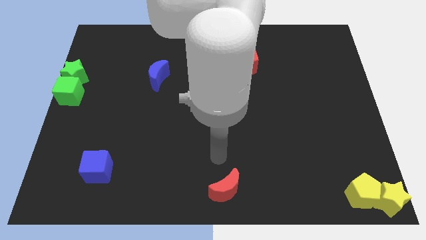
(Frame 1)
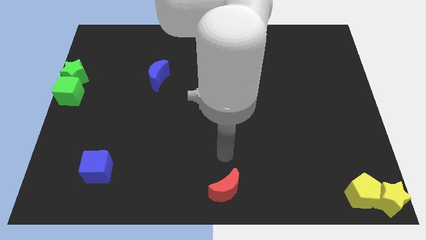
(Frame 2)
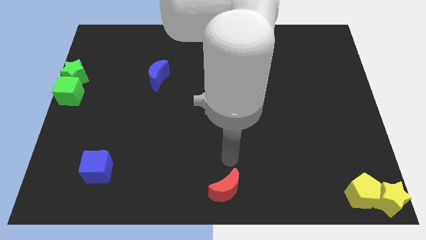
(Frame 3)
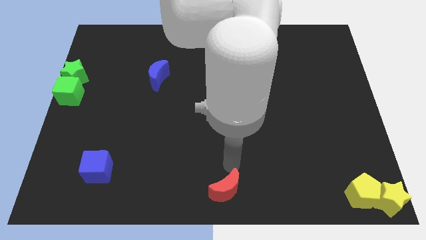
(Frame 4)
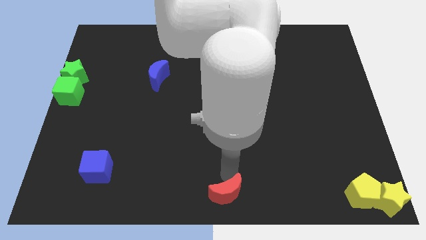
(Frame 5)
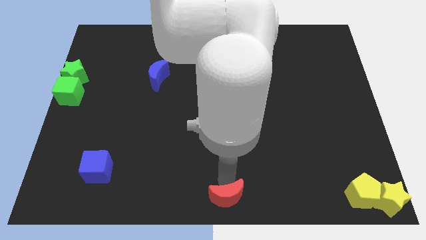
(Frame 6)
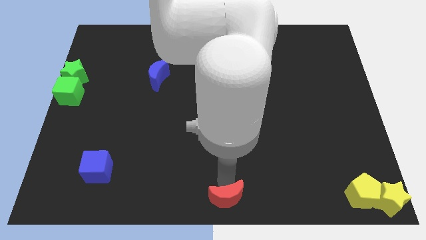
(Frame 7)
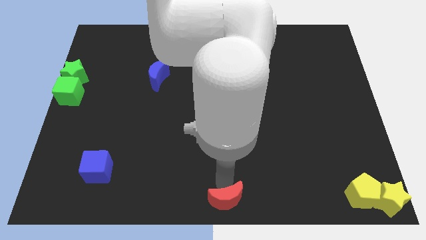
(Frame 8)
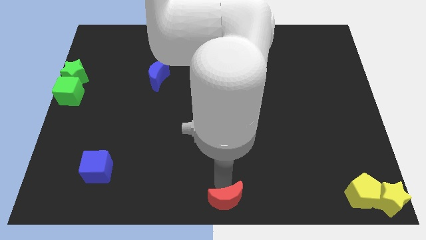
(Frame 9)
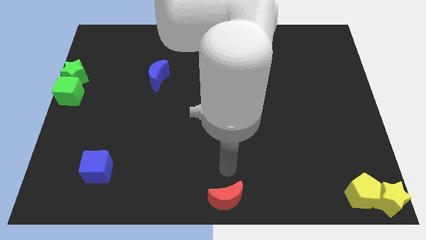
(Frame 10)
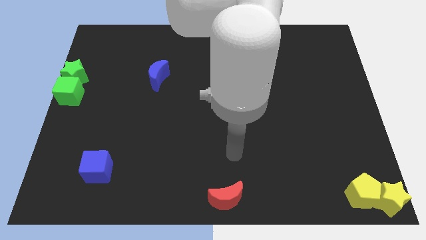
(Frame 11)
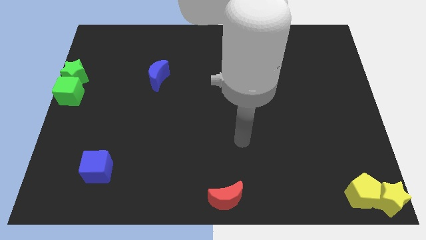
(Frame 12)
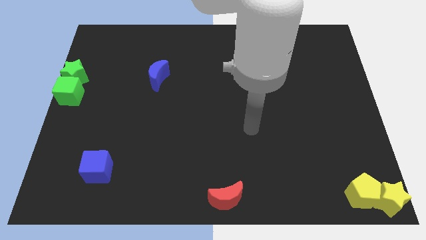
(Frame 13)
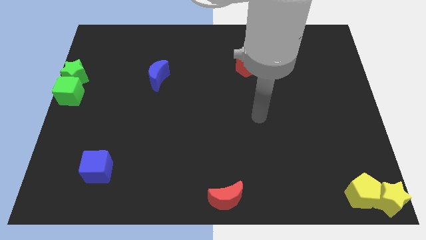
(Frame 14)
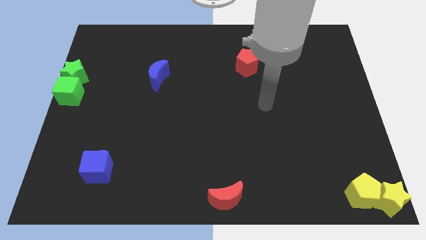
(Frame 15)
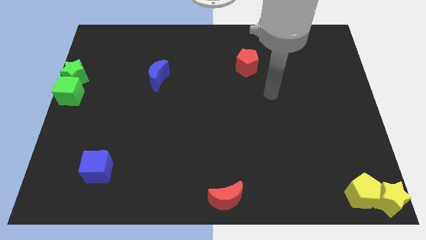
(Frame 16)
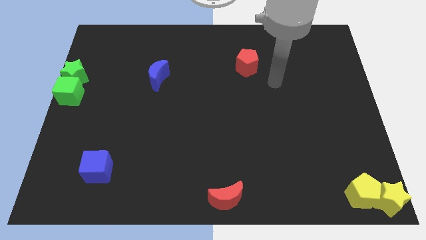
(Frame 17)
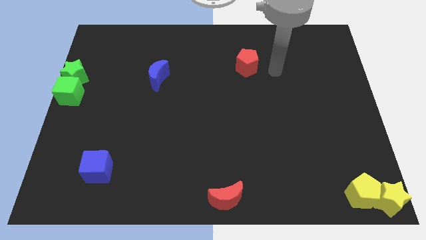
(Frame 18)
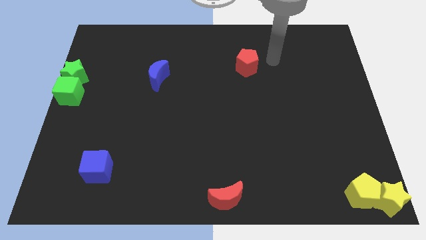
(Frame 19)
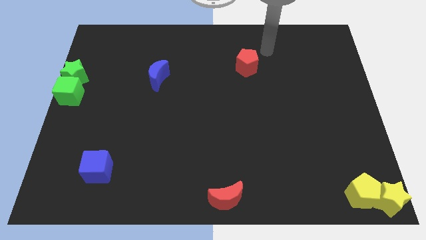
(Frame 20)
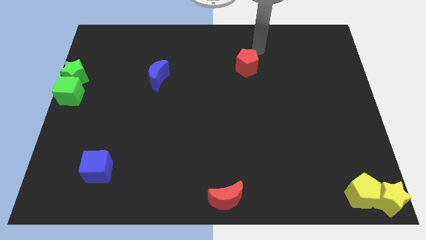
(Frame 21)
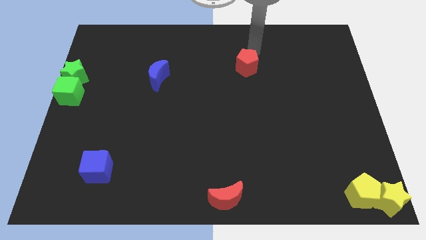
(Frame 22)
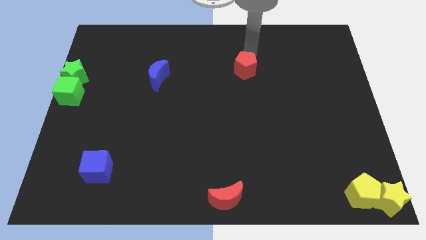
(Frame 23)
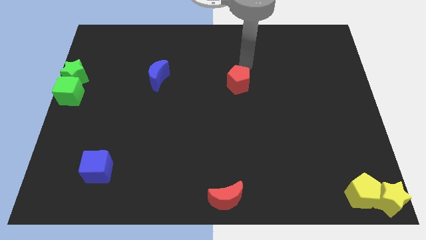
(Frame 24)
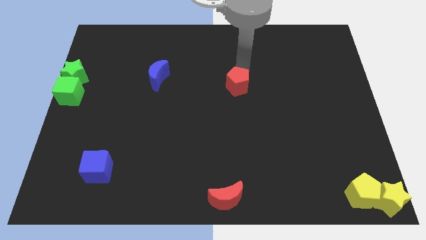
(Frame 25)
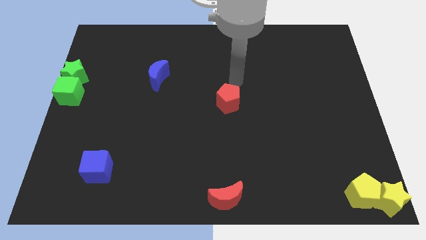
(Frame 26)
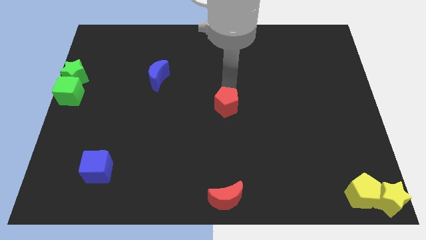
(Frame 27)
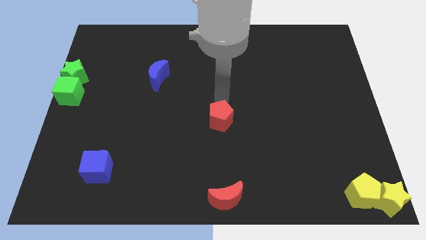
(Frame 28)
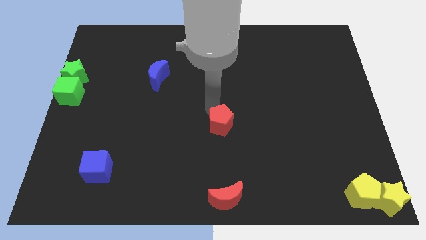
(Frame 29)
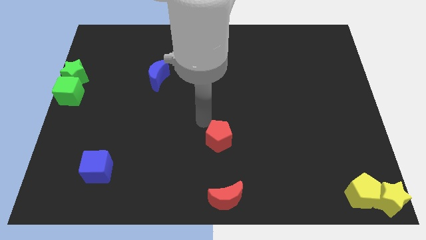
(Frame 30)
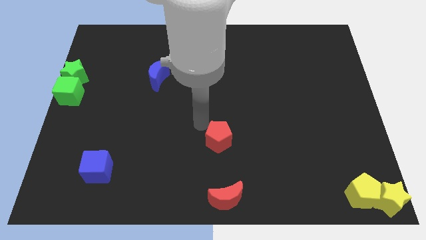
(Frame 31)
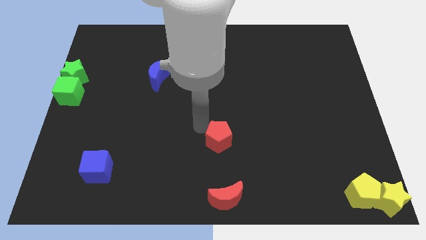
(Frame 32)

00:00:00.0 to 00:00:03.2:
move the red pentagon towards bottom

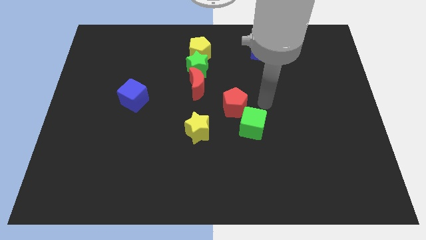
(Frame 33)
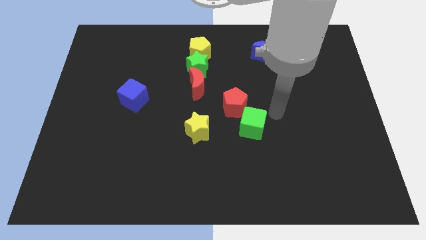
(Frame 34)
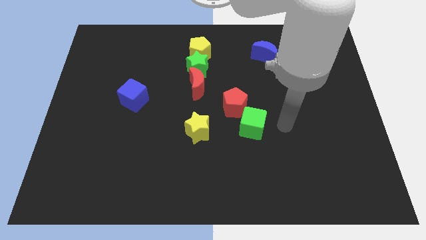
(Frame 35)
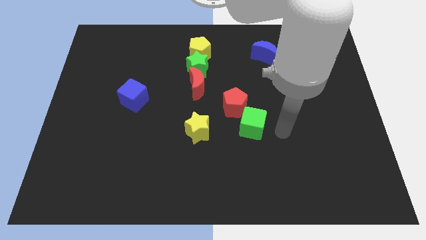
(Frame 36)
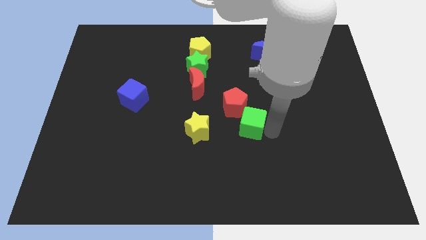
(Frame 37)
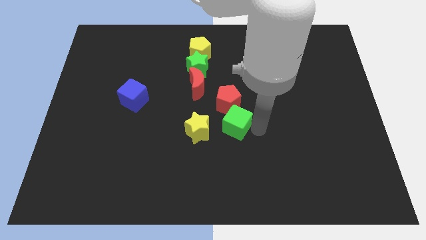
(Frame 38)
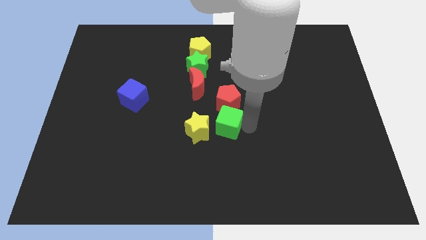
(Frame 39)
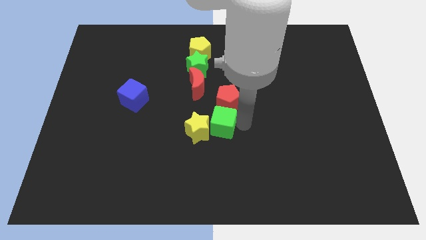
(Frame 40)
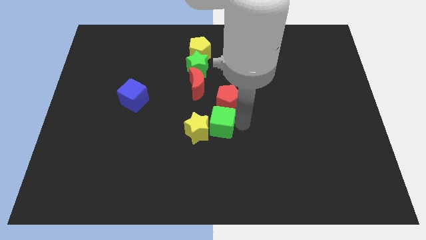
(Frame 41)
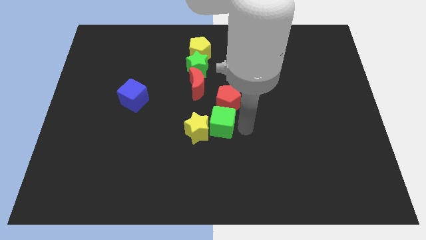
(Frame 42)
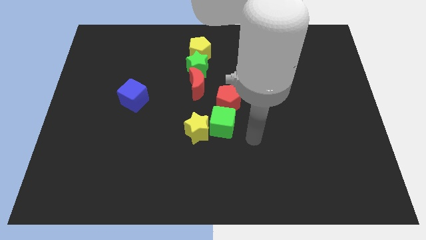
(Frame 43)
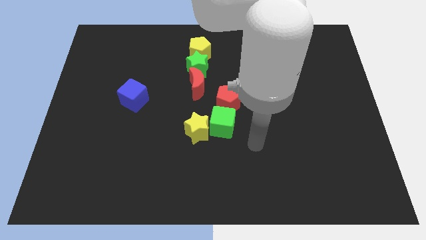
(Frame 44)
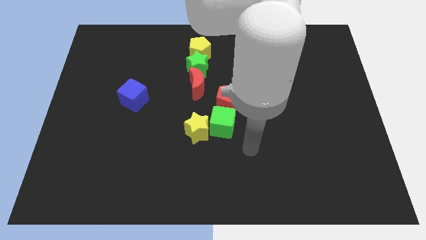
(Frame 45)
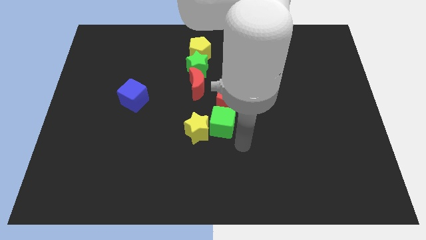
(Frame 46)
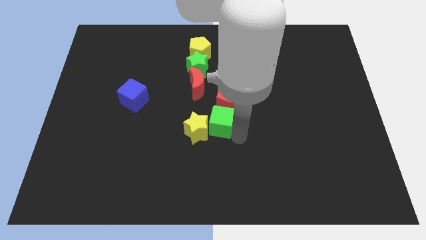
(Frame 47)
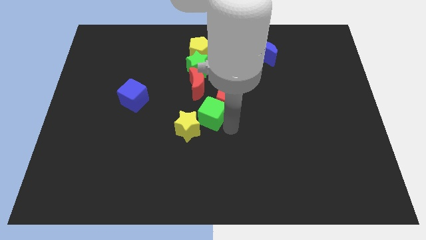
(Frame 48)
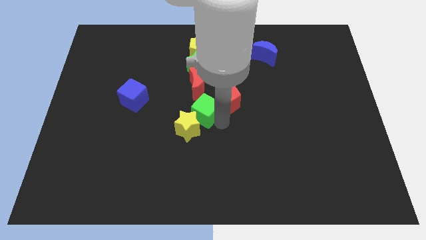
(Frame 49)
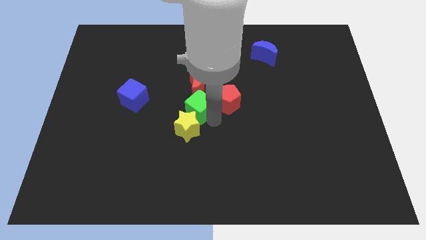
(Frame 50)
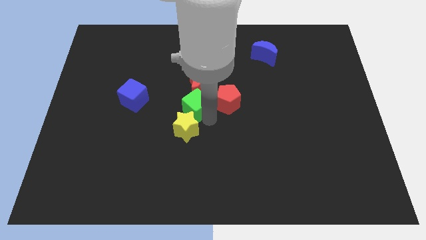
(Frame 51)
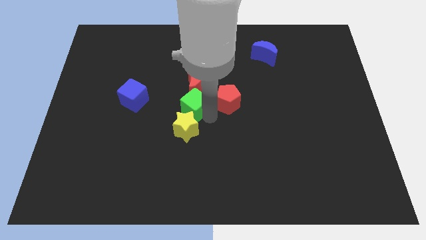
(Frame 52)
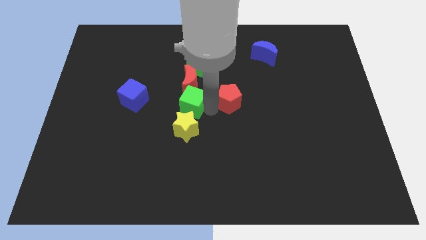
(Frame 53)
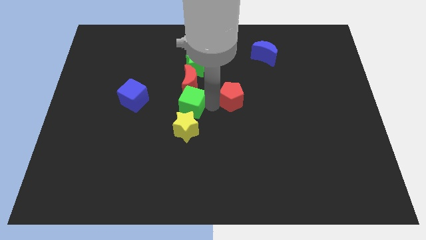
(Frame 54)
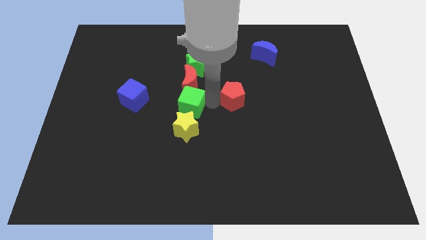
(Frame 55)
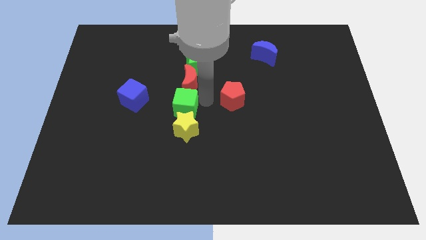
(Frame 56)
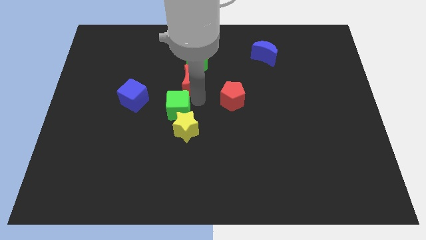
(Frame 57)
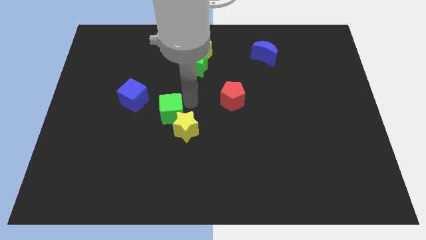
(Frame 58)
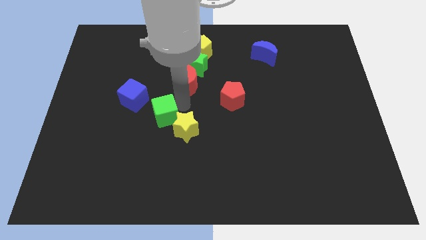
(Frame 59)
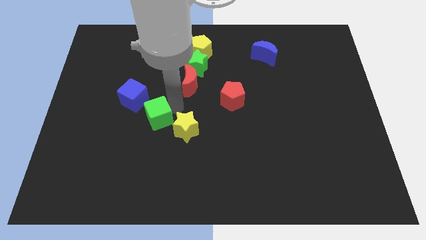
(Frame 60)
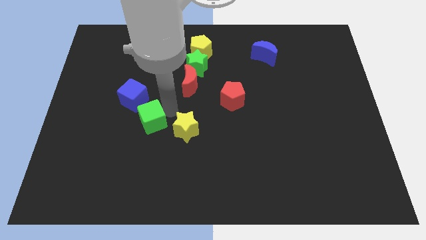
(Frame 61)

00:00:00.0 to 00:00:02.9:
drag green cube towards left side of the board

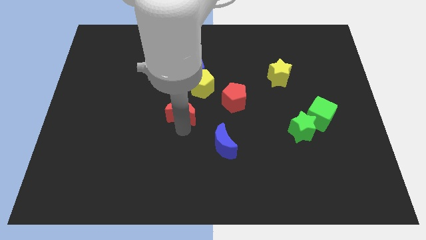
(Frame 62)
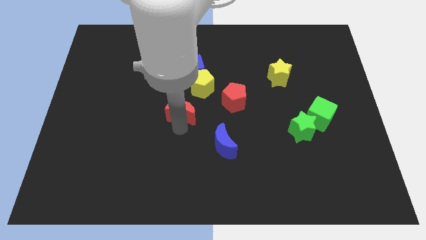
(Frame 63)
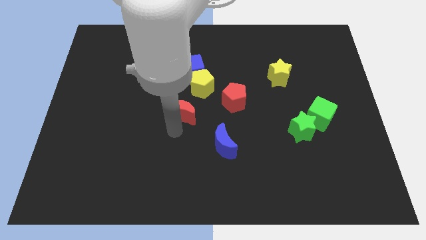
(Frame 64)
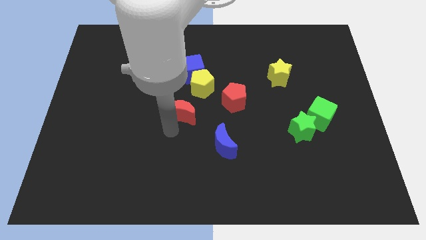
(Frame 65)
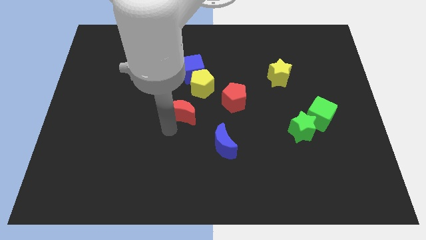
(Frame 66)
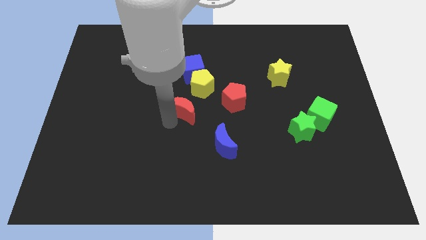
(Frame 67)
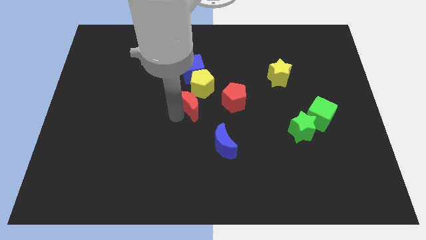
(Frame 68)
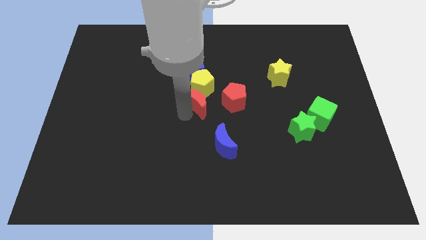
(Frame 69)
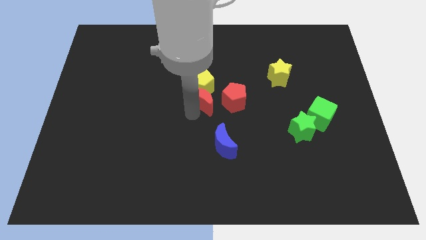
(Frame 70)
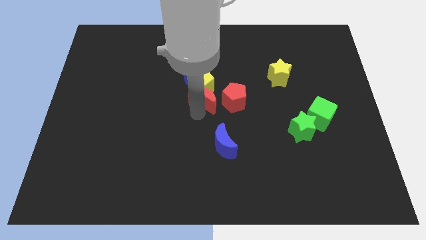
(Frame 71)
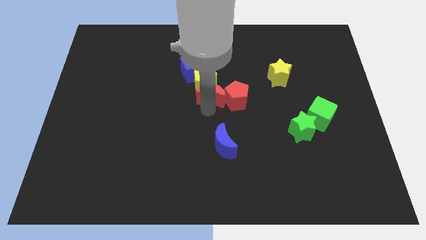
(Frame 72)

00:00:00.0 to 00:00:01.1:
put the red moon to the left side of red pentagon

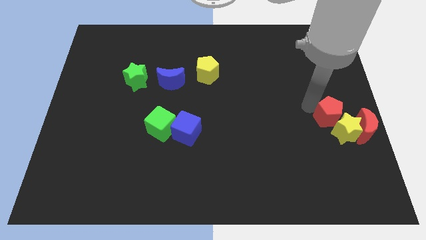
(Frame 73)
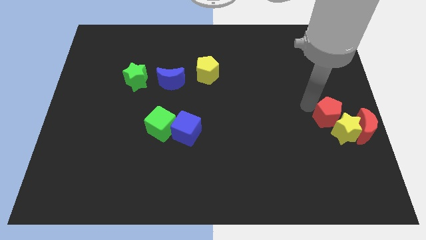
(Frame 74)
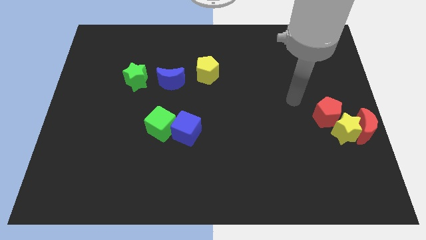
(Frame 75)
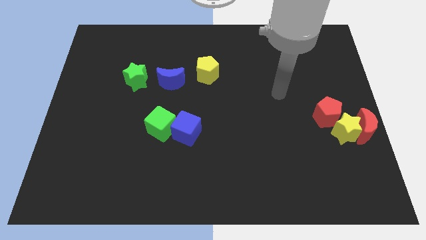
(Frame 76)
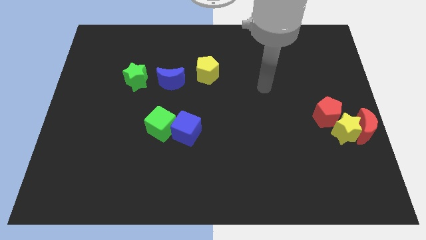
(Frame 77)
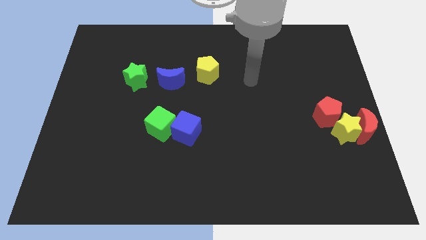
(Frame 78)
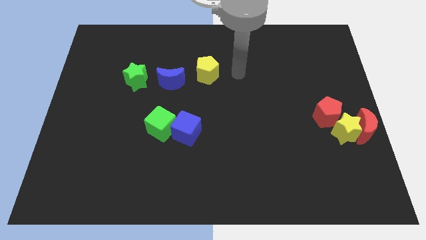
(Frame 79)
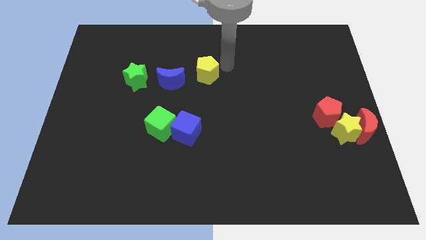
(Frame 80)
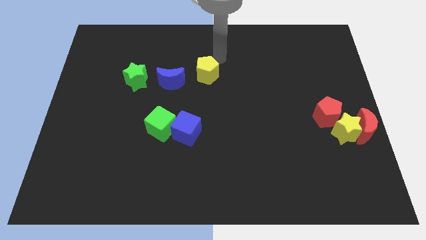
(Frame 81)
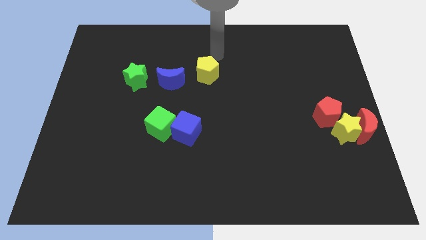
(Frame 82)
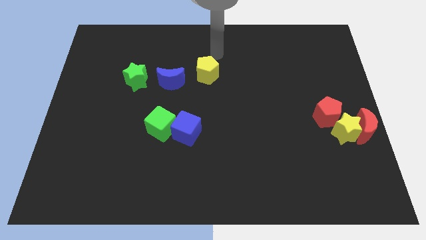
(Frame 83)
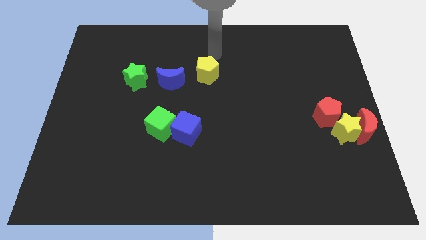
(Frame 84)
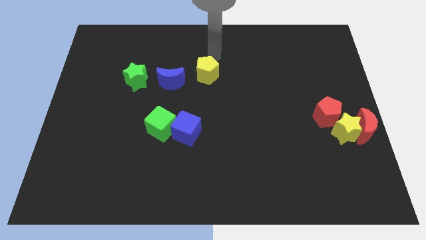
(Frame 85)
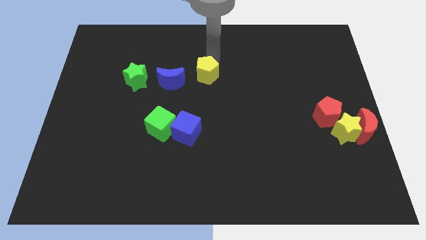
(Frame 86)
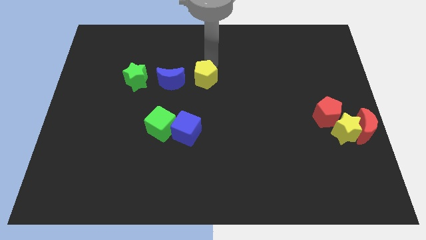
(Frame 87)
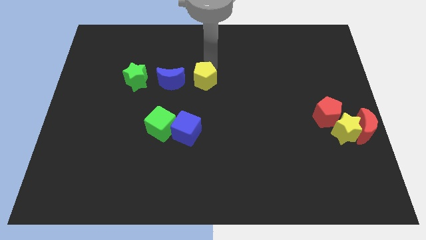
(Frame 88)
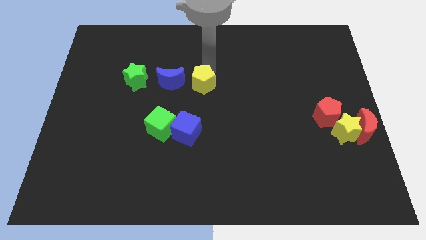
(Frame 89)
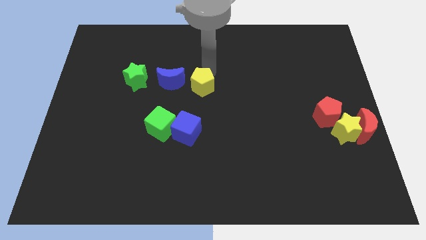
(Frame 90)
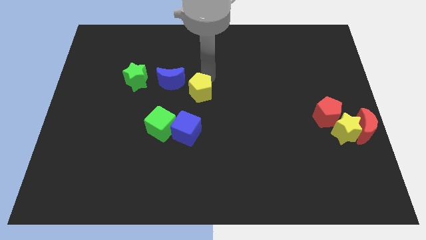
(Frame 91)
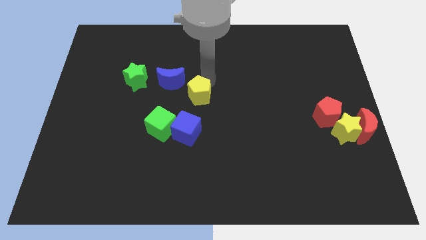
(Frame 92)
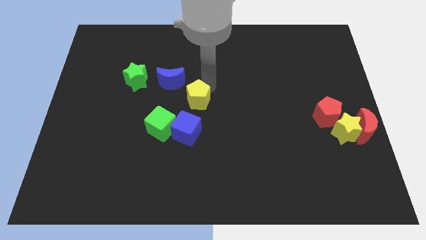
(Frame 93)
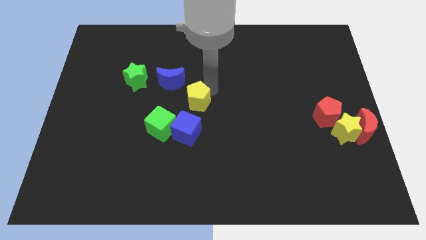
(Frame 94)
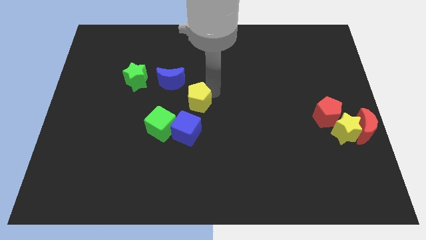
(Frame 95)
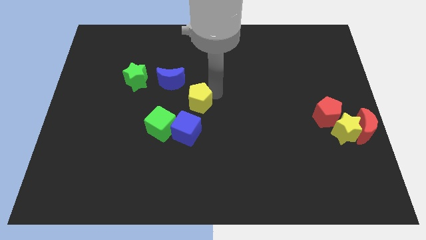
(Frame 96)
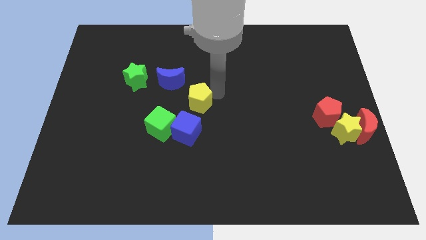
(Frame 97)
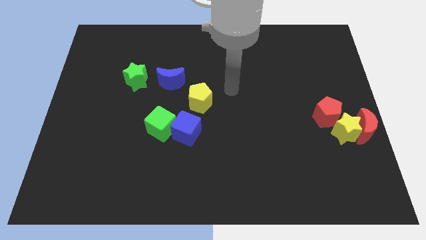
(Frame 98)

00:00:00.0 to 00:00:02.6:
push yellow pentagon towards blue cube
